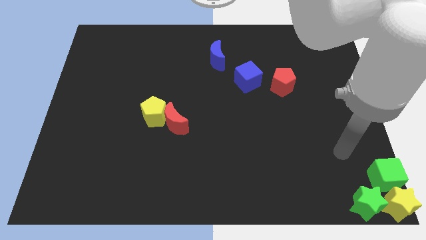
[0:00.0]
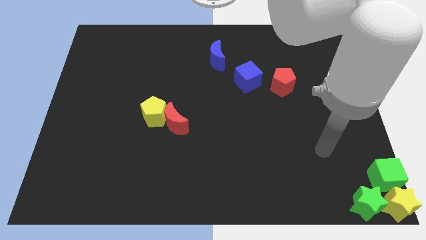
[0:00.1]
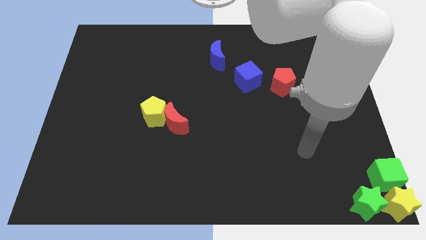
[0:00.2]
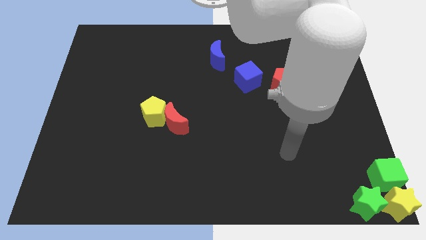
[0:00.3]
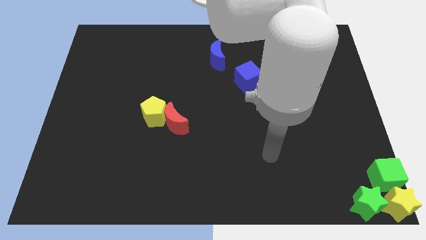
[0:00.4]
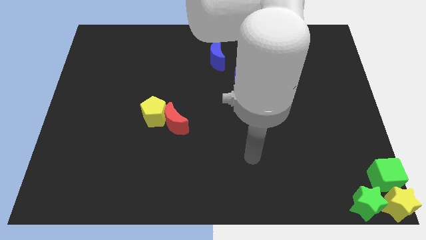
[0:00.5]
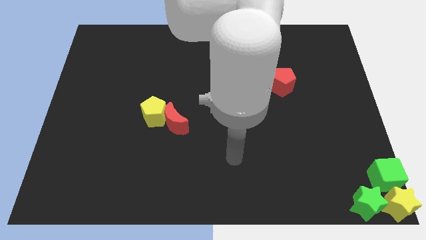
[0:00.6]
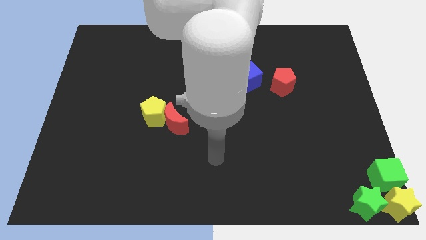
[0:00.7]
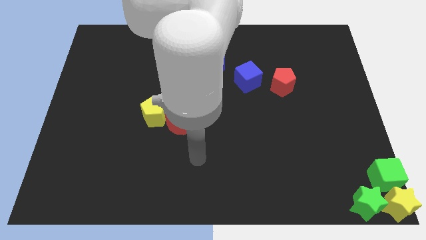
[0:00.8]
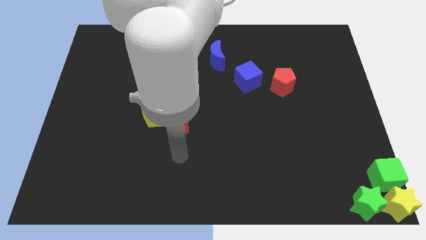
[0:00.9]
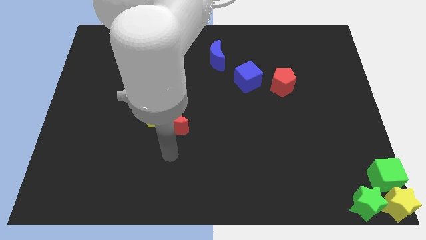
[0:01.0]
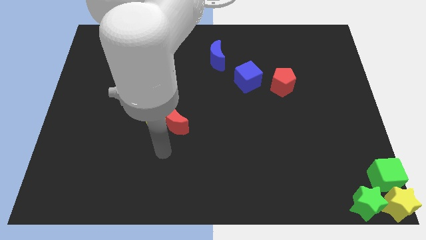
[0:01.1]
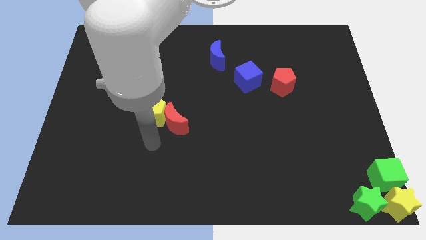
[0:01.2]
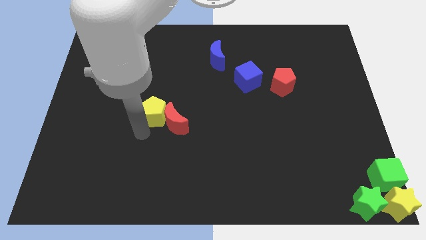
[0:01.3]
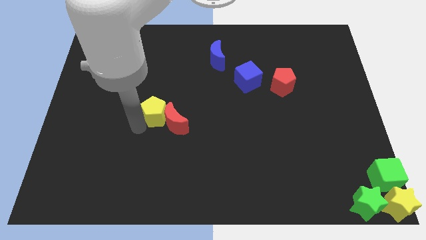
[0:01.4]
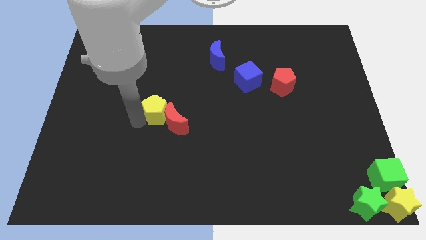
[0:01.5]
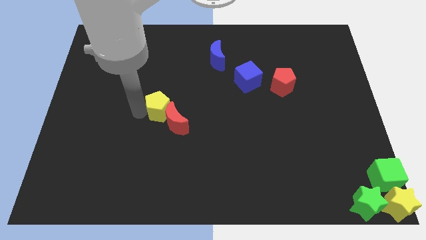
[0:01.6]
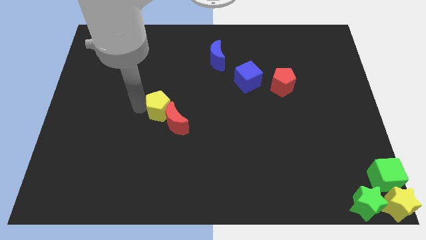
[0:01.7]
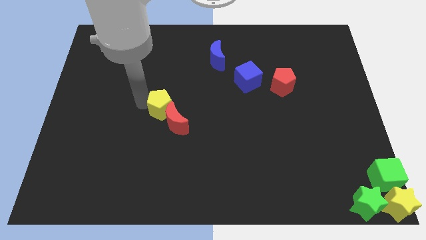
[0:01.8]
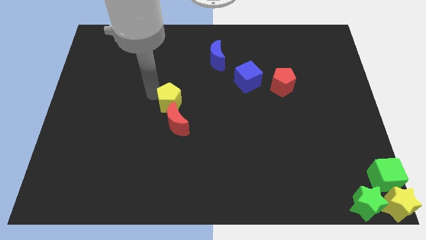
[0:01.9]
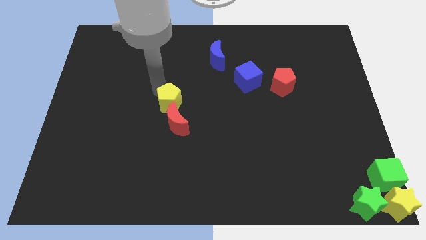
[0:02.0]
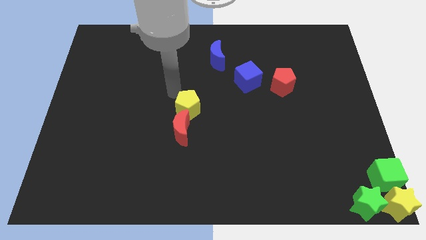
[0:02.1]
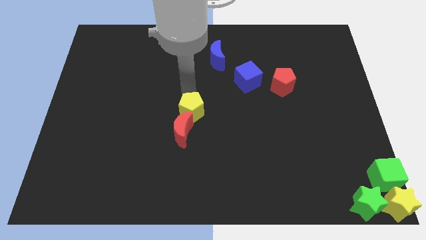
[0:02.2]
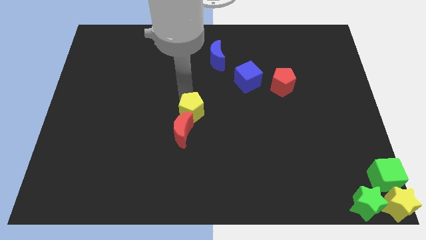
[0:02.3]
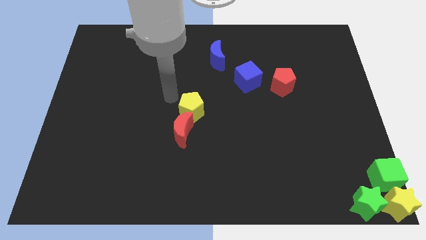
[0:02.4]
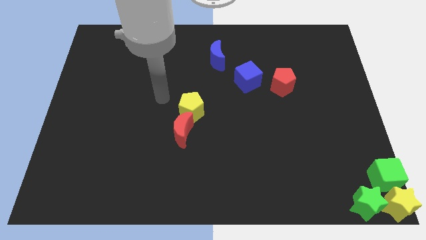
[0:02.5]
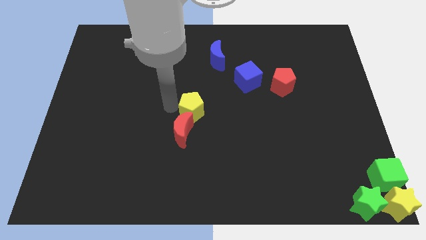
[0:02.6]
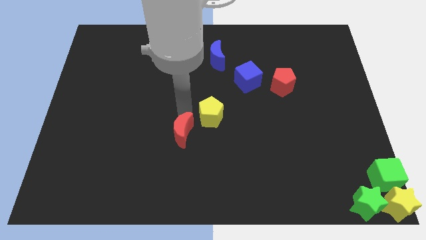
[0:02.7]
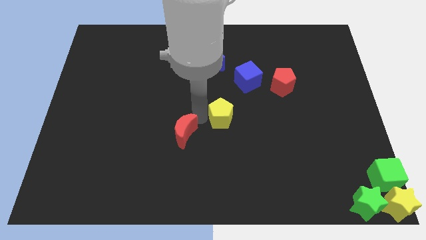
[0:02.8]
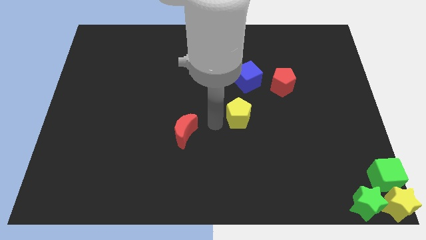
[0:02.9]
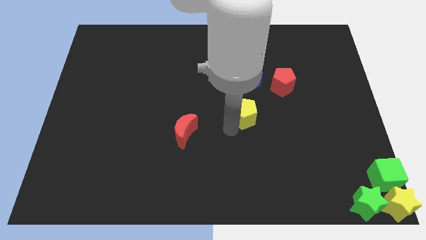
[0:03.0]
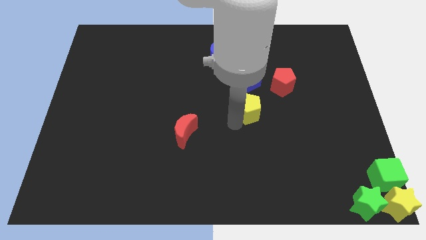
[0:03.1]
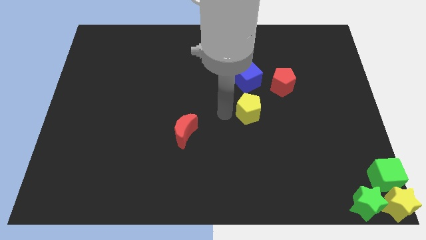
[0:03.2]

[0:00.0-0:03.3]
push the yellow pentagon towards the center of the board

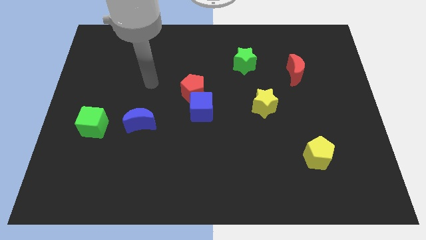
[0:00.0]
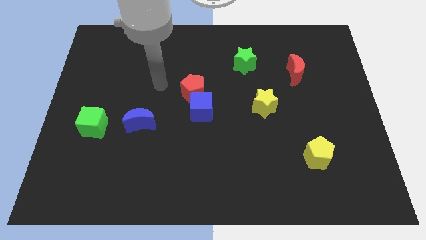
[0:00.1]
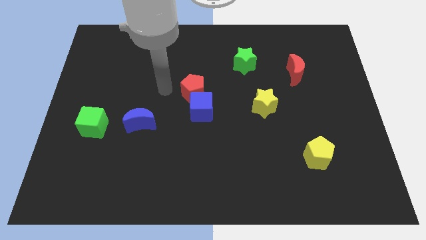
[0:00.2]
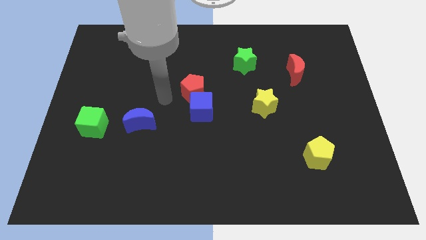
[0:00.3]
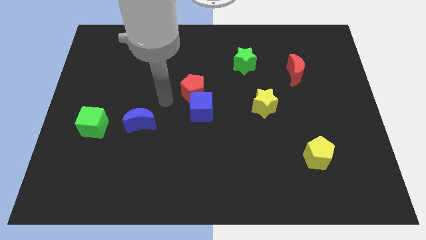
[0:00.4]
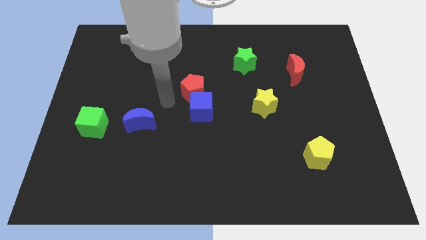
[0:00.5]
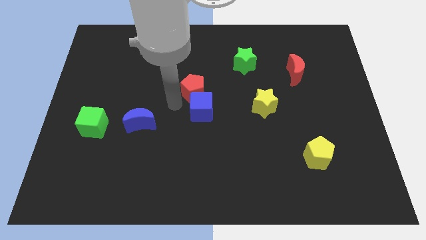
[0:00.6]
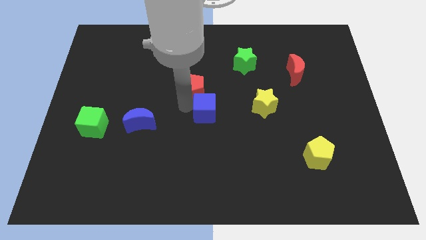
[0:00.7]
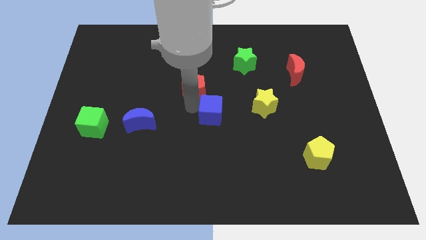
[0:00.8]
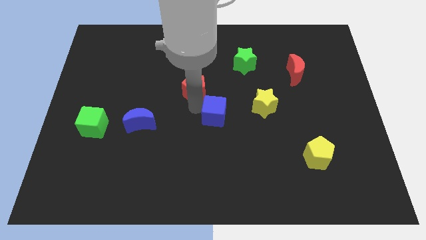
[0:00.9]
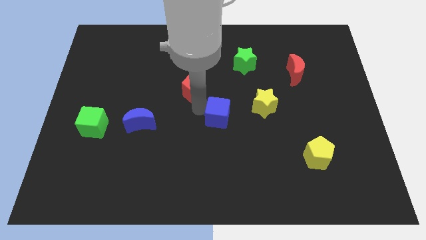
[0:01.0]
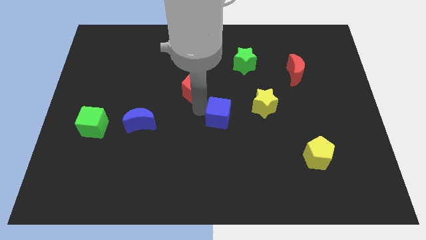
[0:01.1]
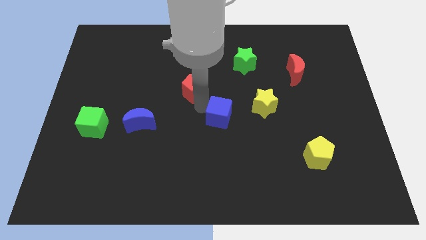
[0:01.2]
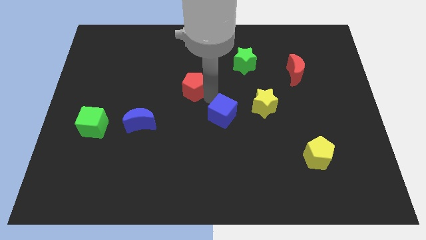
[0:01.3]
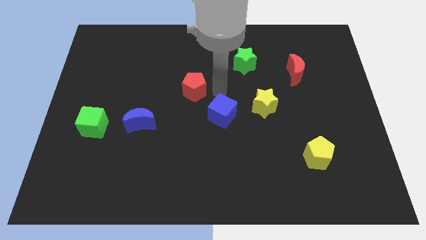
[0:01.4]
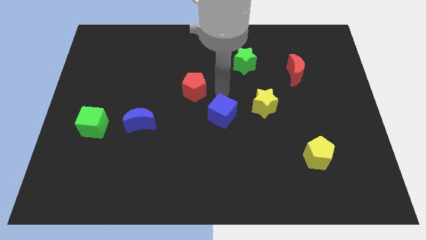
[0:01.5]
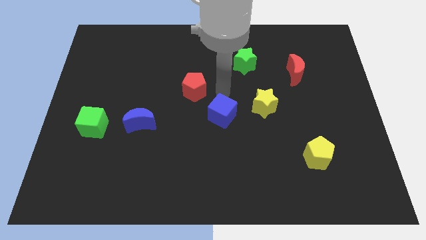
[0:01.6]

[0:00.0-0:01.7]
move the blue moon to the center of the board

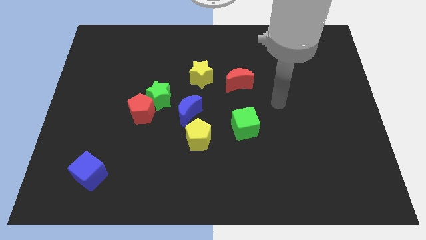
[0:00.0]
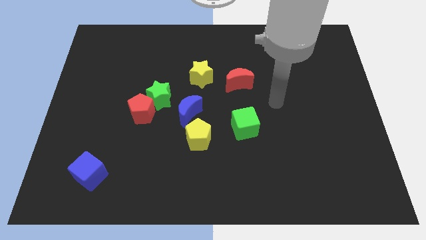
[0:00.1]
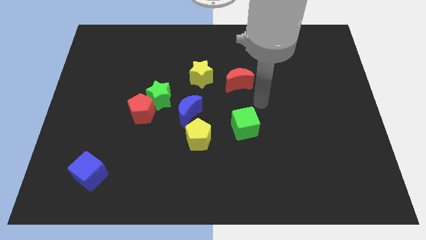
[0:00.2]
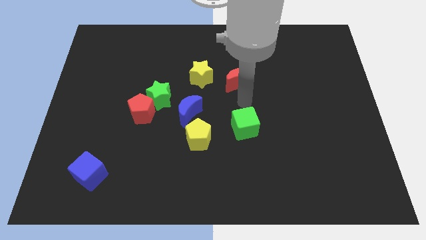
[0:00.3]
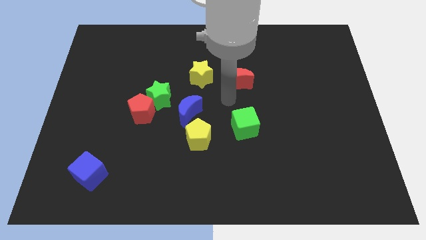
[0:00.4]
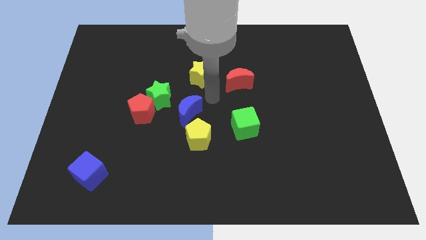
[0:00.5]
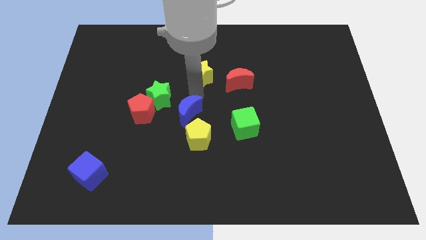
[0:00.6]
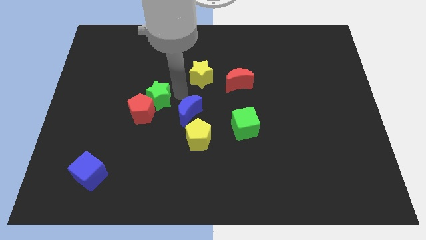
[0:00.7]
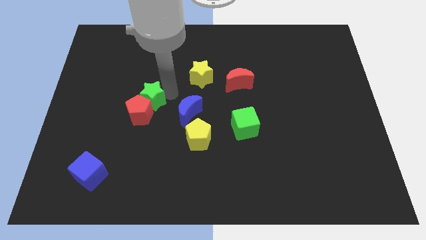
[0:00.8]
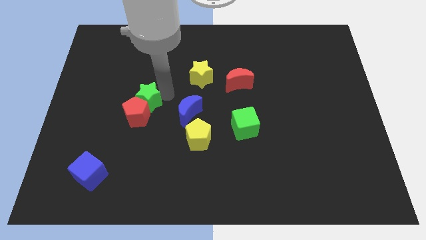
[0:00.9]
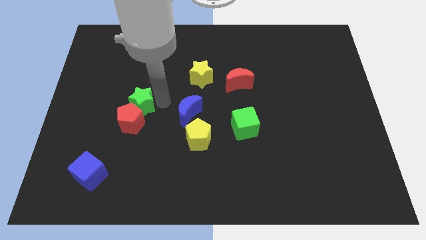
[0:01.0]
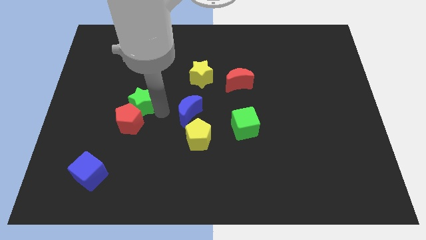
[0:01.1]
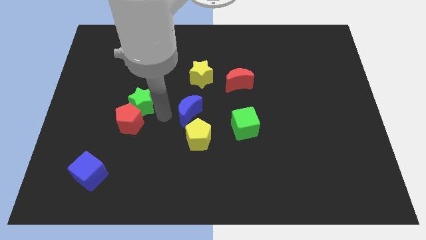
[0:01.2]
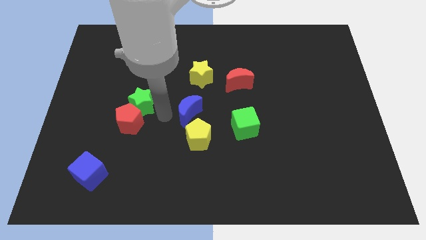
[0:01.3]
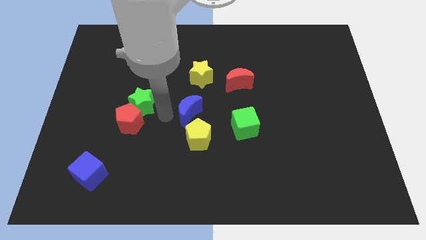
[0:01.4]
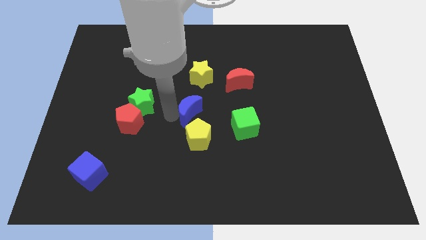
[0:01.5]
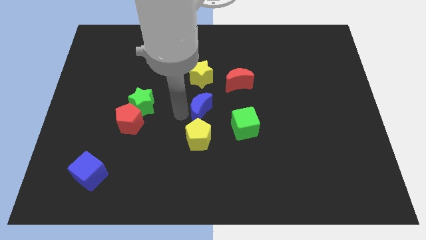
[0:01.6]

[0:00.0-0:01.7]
move the green star slightly to the left

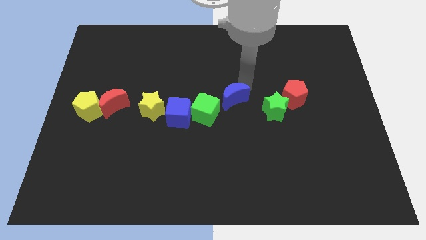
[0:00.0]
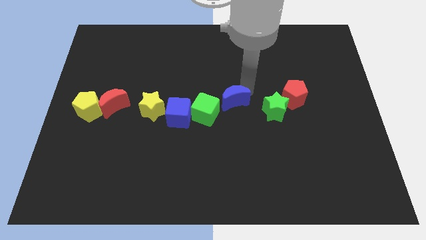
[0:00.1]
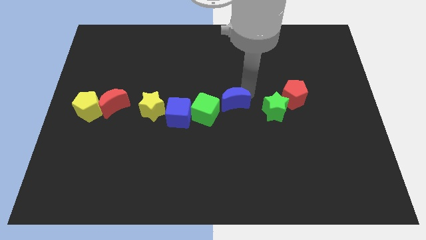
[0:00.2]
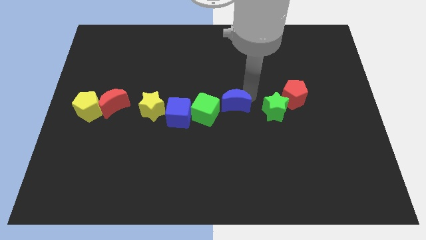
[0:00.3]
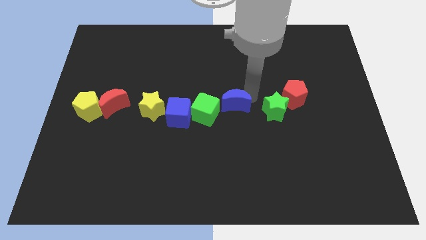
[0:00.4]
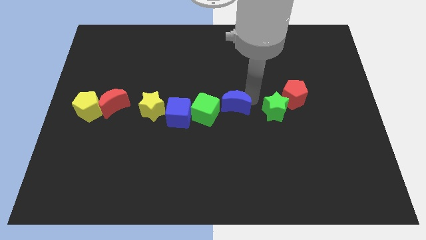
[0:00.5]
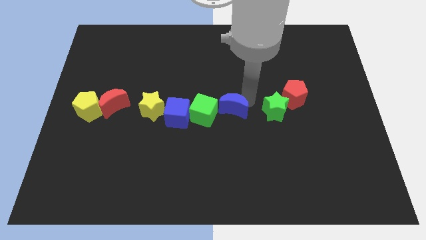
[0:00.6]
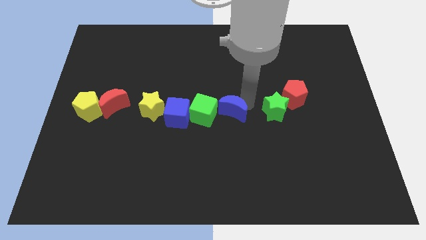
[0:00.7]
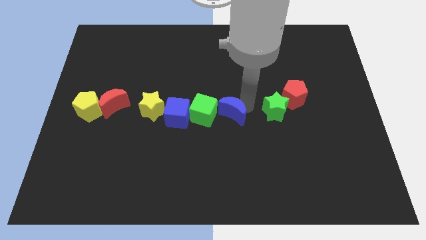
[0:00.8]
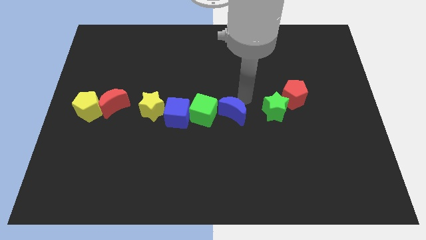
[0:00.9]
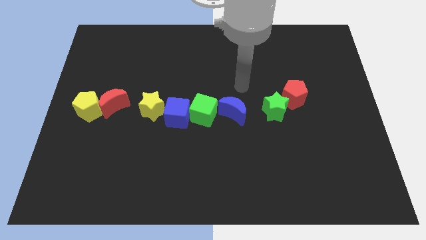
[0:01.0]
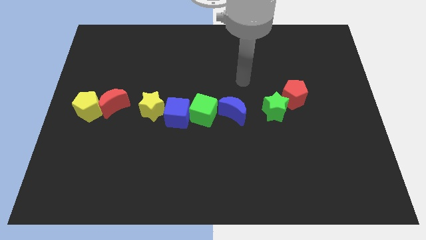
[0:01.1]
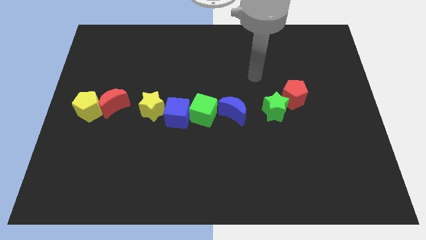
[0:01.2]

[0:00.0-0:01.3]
move the blue crescent right to the green cube

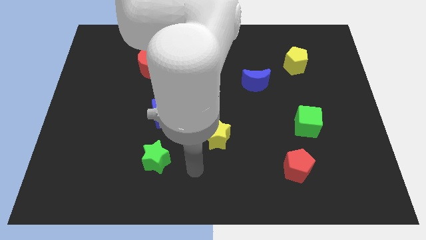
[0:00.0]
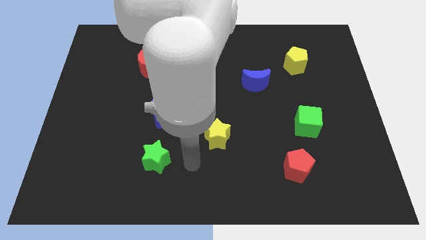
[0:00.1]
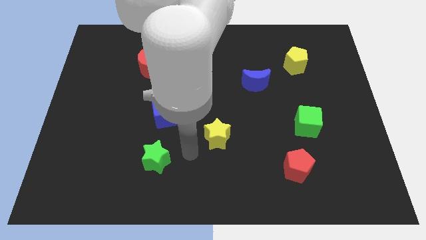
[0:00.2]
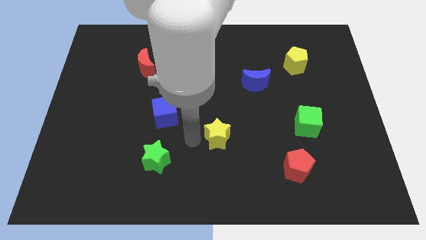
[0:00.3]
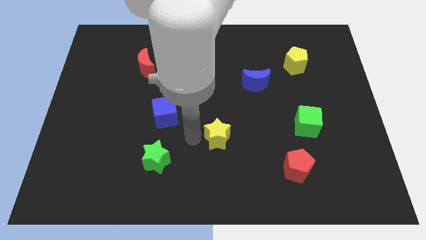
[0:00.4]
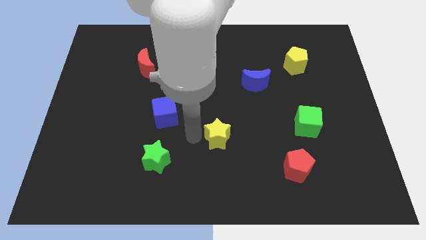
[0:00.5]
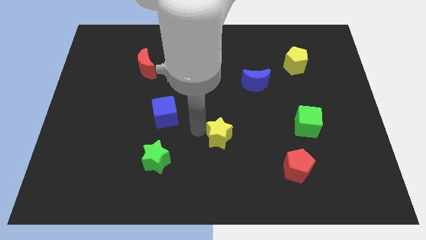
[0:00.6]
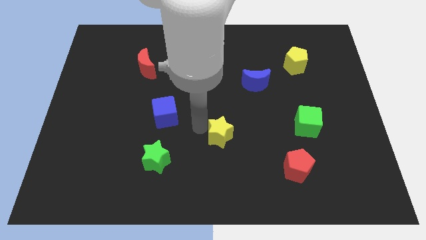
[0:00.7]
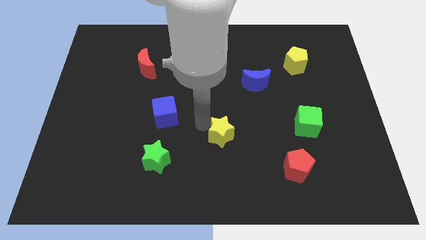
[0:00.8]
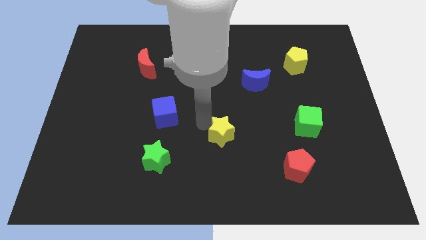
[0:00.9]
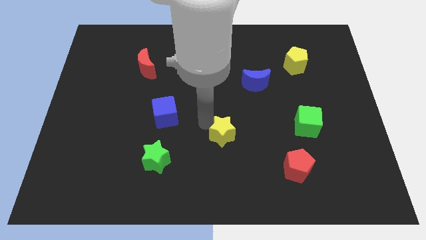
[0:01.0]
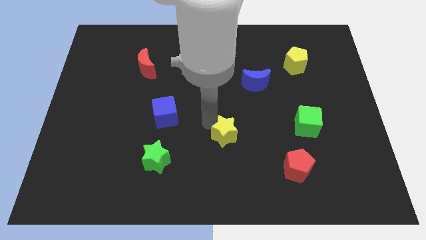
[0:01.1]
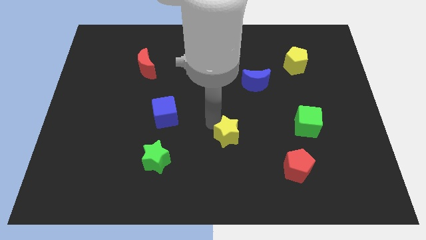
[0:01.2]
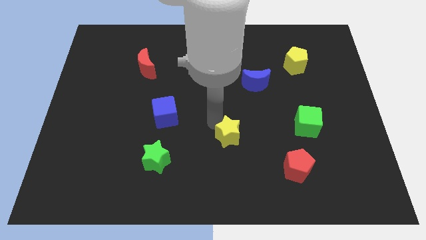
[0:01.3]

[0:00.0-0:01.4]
move the yellow star slightly to the right
